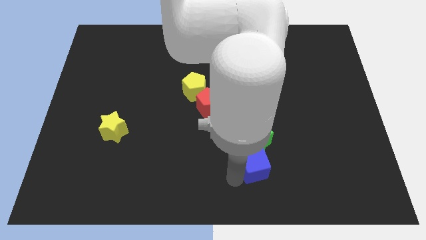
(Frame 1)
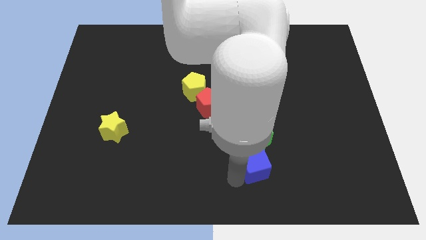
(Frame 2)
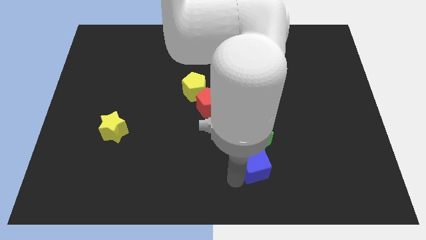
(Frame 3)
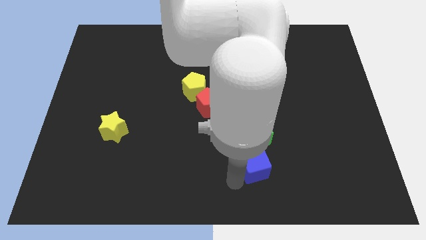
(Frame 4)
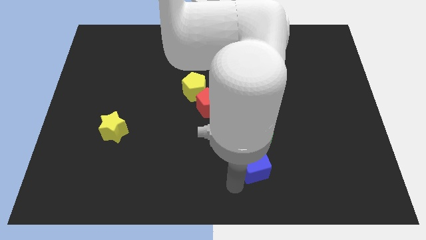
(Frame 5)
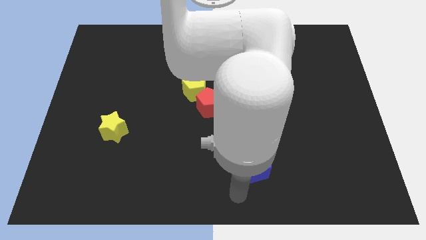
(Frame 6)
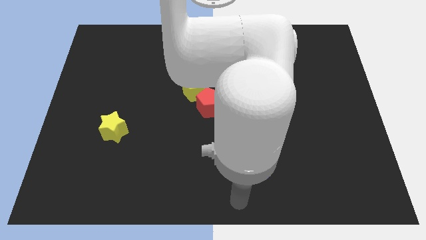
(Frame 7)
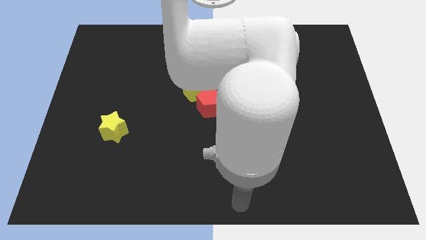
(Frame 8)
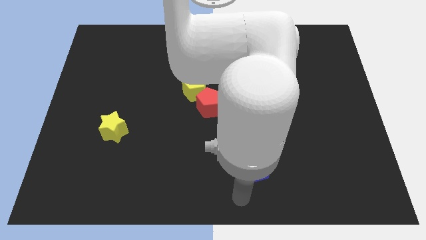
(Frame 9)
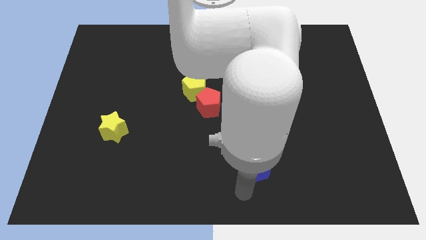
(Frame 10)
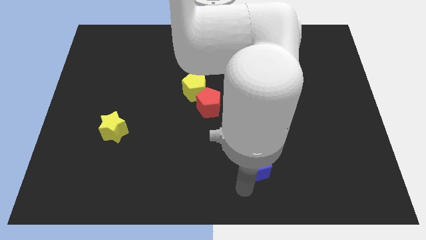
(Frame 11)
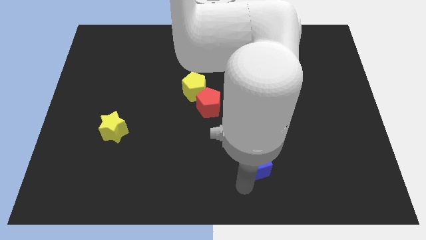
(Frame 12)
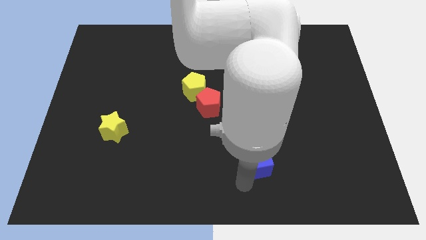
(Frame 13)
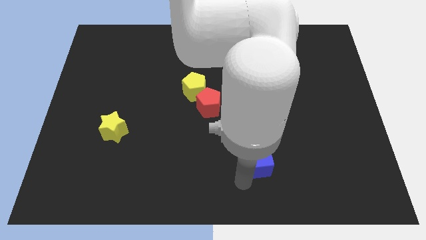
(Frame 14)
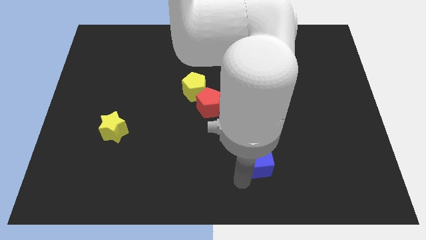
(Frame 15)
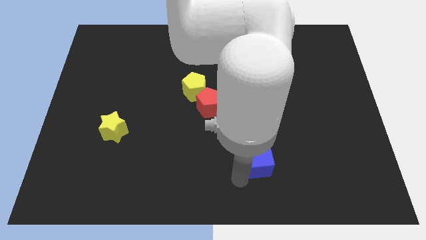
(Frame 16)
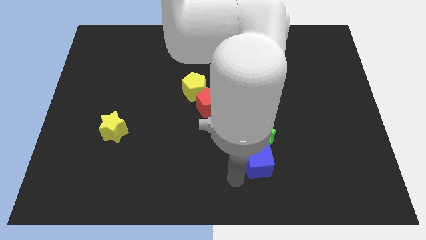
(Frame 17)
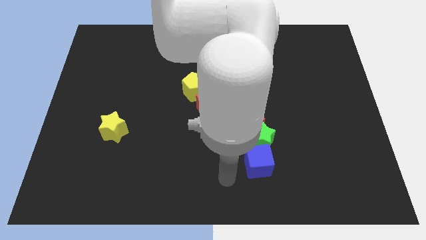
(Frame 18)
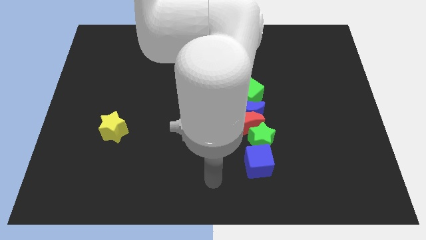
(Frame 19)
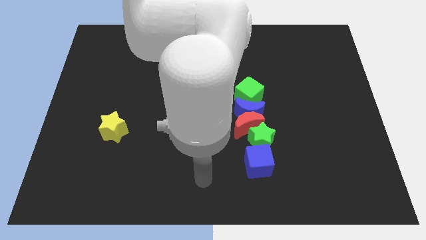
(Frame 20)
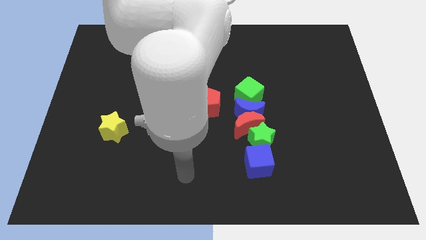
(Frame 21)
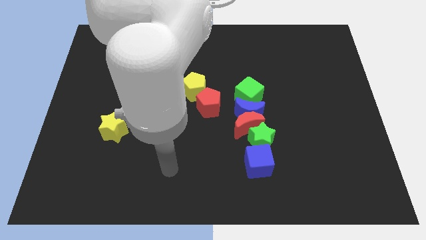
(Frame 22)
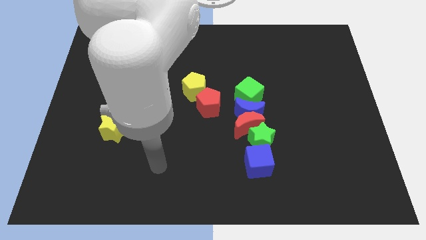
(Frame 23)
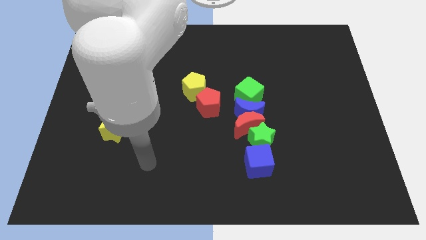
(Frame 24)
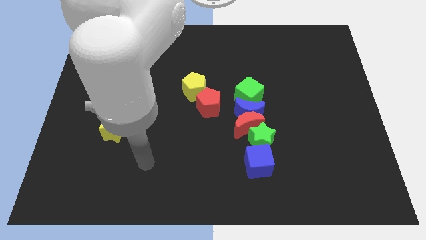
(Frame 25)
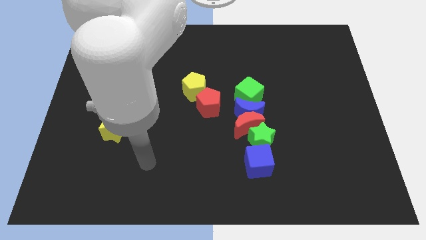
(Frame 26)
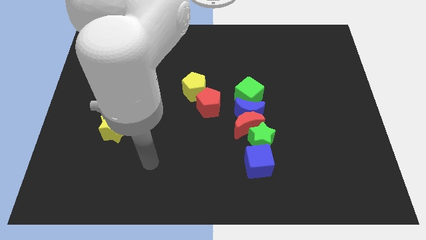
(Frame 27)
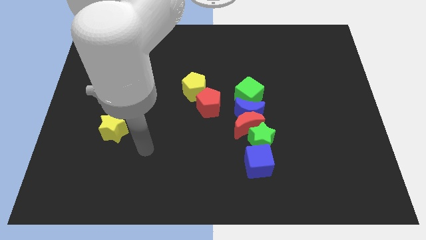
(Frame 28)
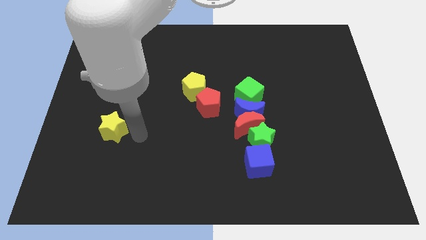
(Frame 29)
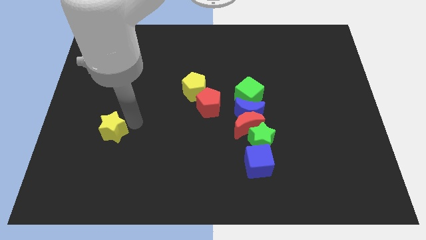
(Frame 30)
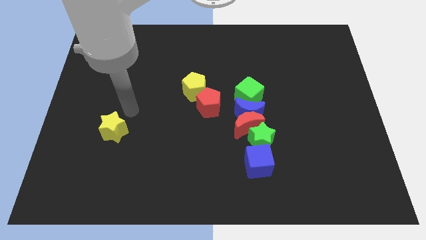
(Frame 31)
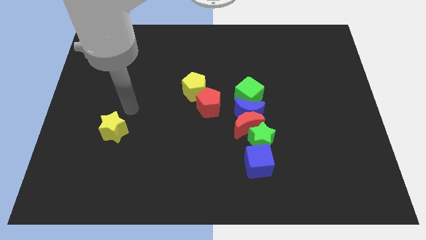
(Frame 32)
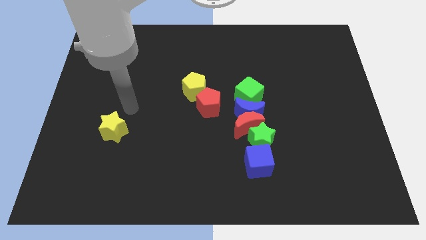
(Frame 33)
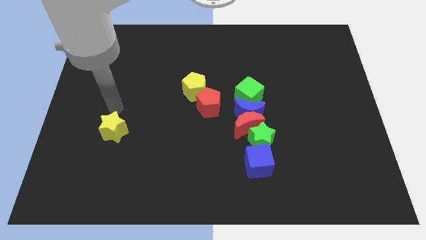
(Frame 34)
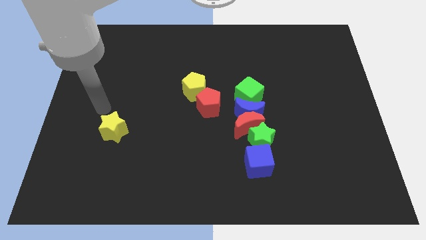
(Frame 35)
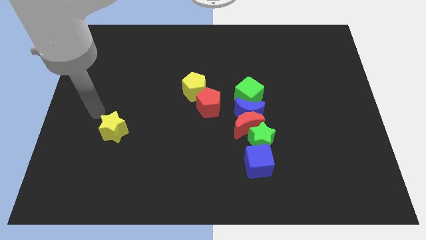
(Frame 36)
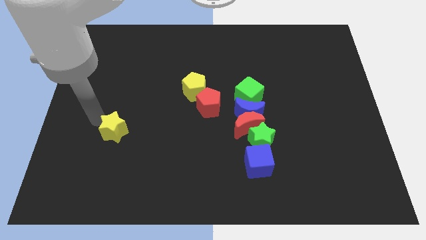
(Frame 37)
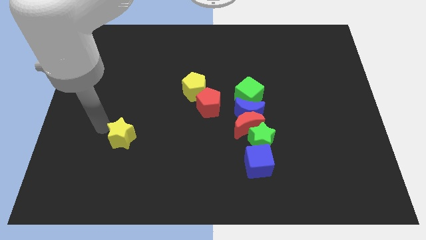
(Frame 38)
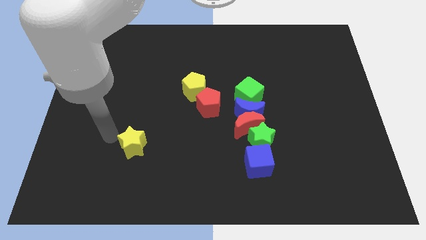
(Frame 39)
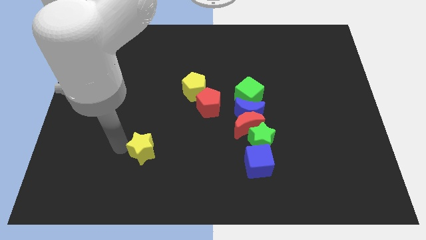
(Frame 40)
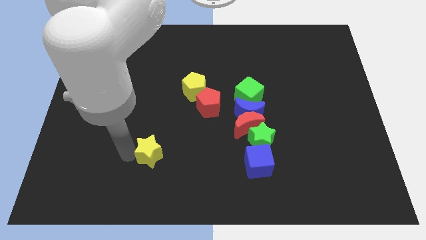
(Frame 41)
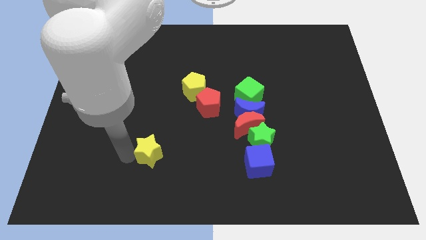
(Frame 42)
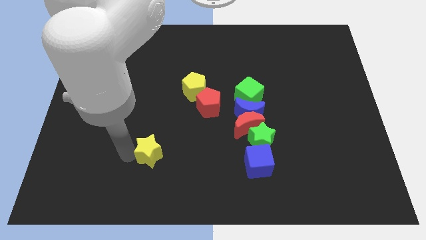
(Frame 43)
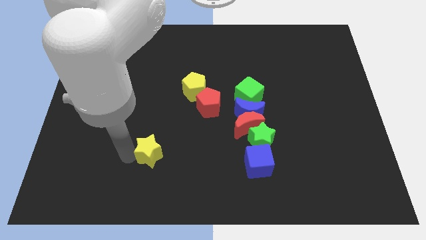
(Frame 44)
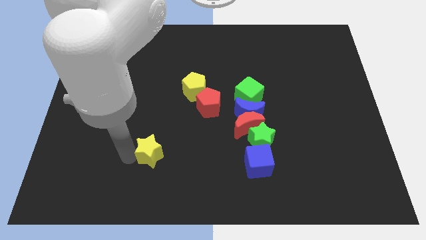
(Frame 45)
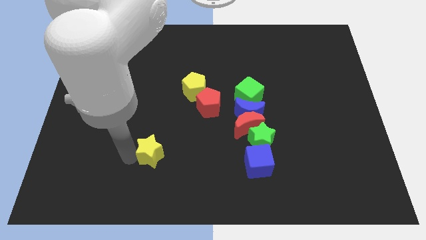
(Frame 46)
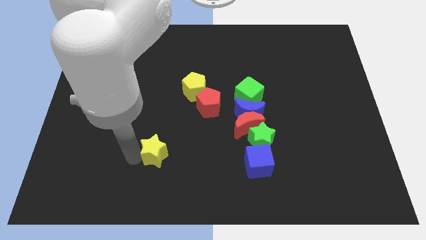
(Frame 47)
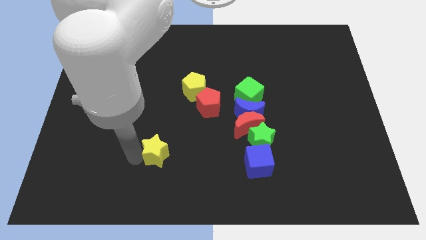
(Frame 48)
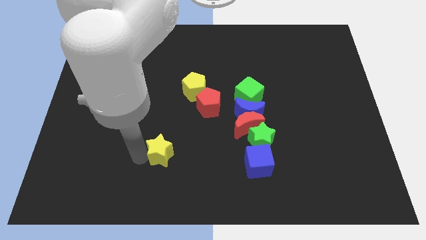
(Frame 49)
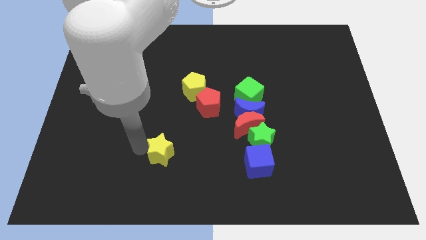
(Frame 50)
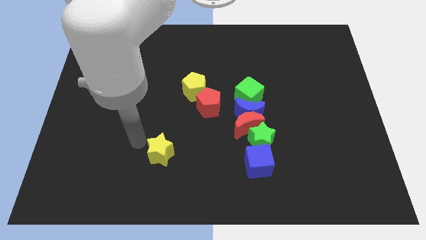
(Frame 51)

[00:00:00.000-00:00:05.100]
move the yellow star to right side of blue cube

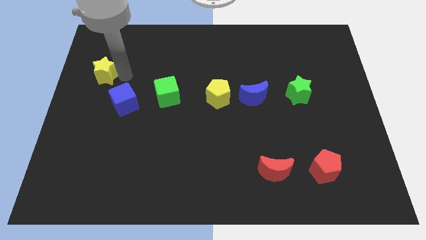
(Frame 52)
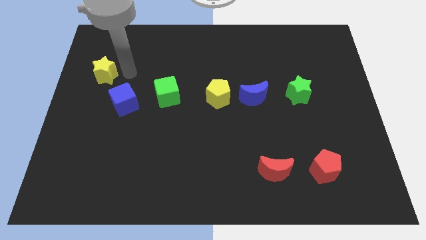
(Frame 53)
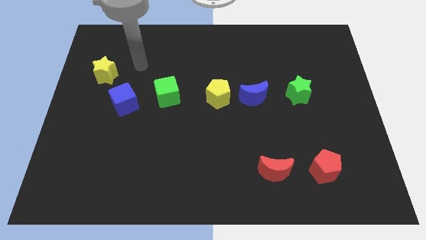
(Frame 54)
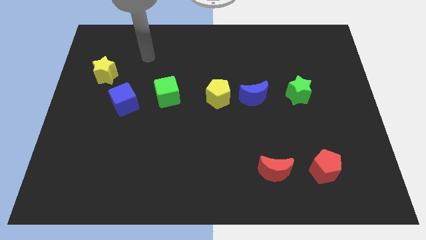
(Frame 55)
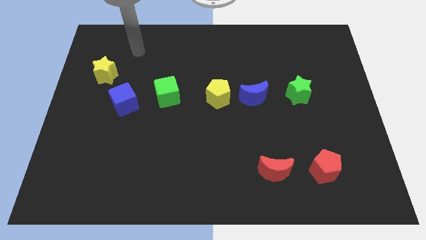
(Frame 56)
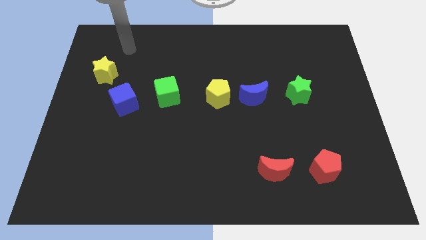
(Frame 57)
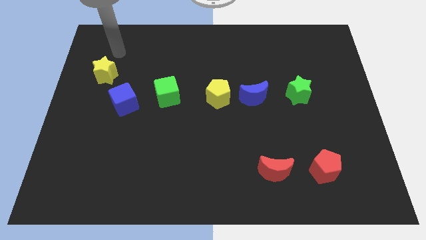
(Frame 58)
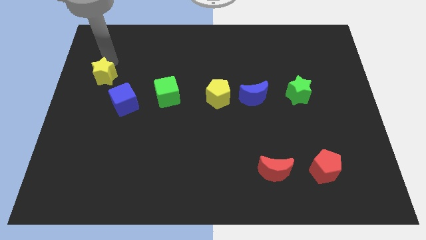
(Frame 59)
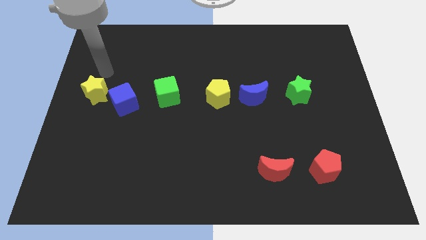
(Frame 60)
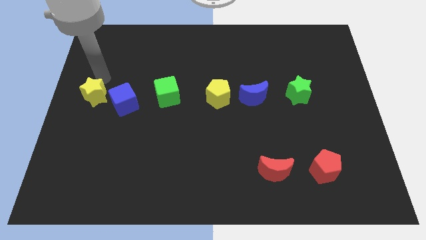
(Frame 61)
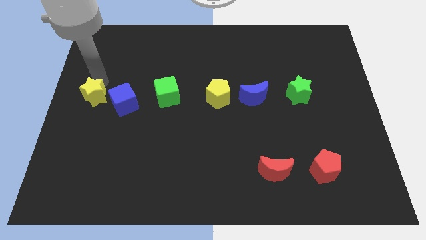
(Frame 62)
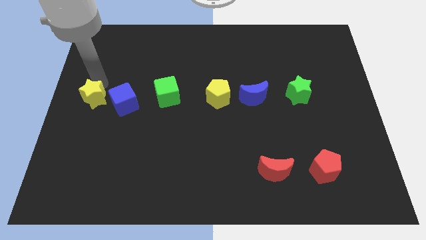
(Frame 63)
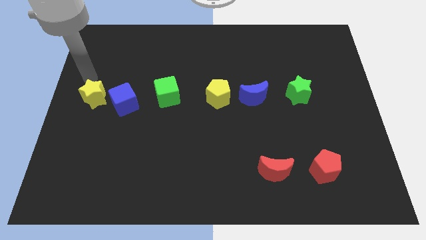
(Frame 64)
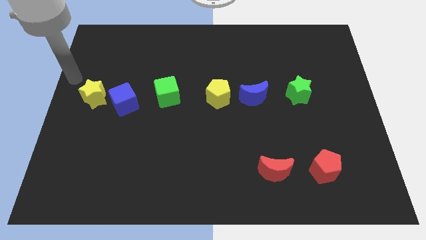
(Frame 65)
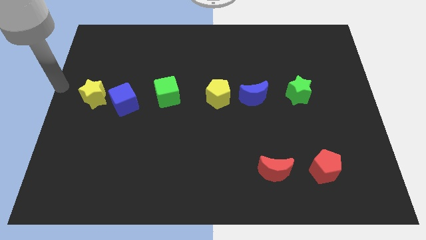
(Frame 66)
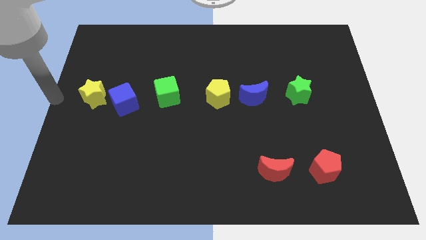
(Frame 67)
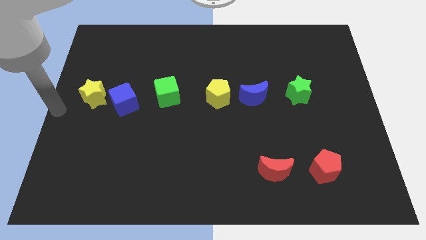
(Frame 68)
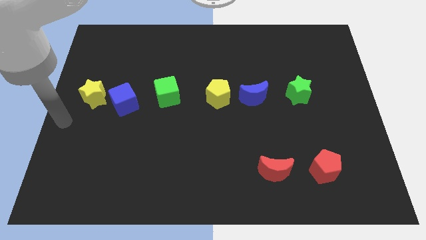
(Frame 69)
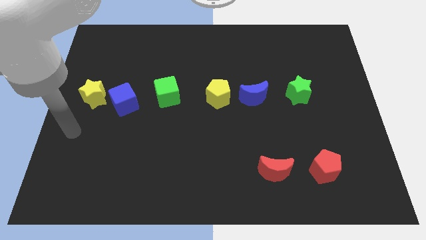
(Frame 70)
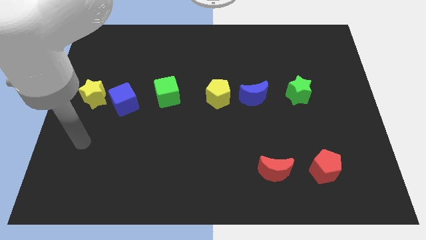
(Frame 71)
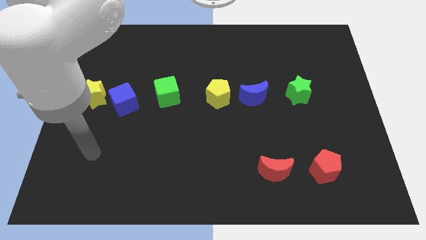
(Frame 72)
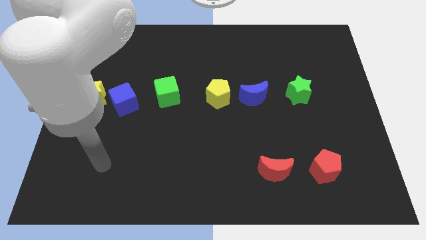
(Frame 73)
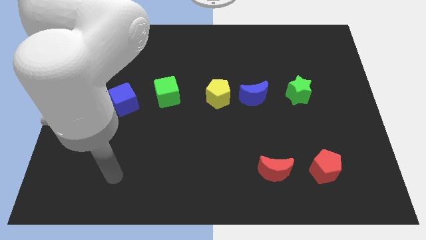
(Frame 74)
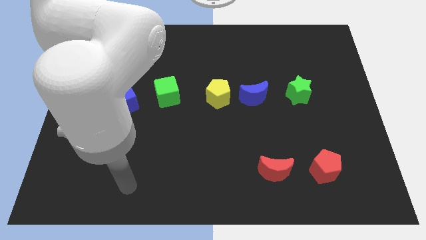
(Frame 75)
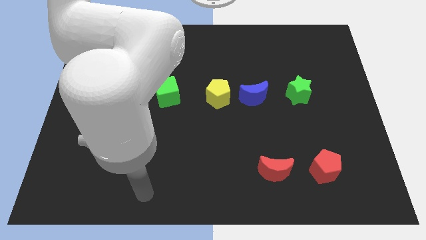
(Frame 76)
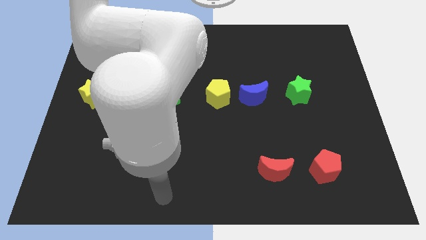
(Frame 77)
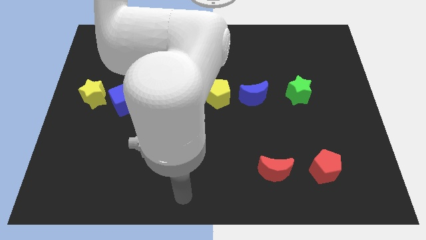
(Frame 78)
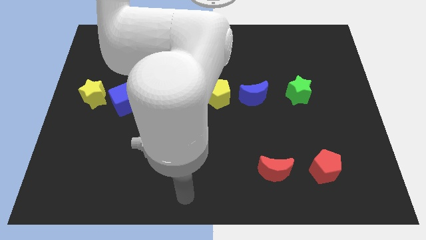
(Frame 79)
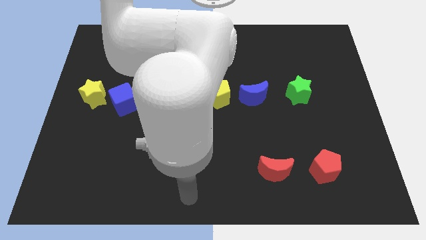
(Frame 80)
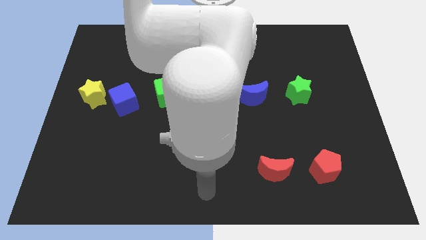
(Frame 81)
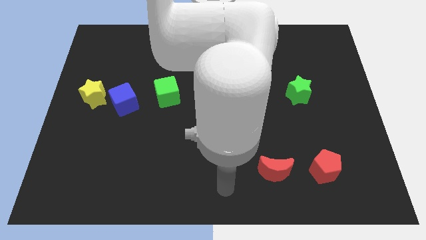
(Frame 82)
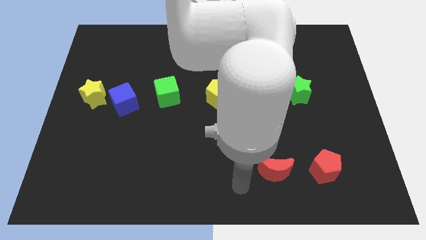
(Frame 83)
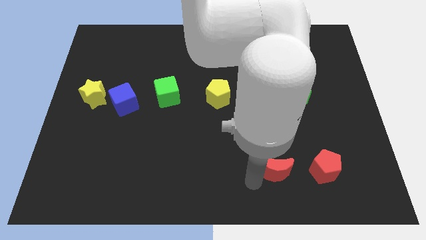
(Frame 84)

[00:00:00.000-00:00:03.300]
slide the yellow star to the top left side of the blue cube

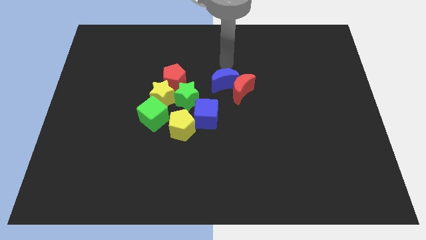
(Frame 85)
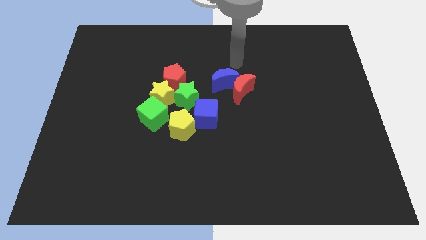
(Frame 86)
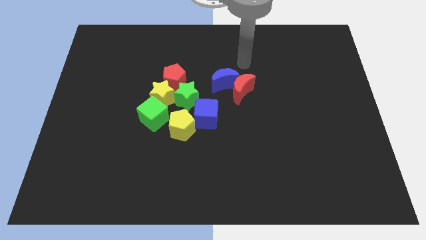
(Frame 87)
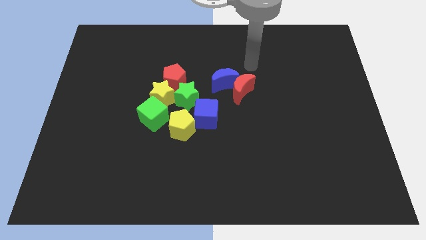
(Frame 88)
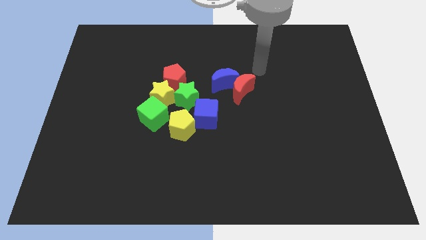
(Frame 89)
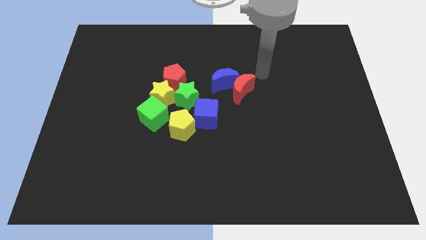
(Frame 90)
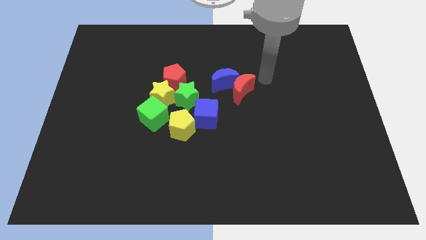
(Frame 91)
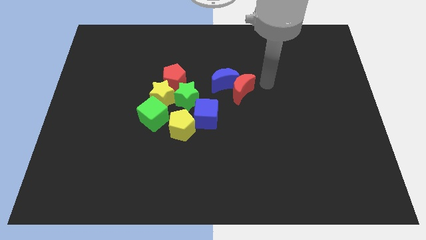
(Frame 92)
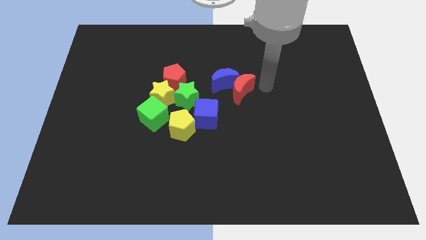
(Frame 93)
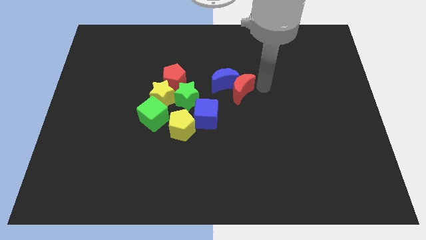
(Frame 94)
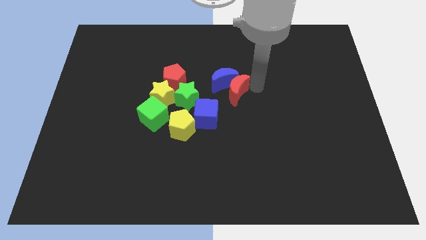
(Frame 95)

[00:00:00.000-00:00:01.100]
move red moon slightly into blue moon
